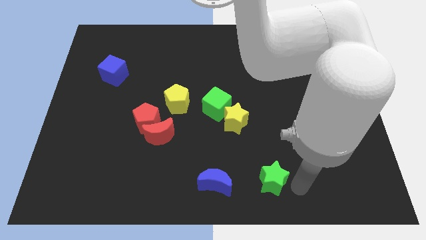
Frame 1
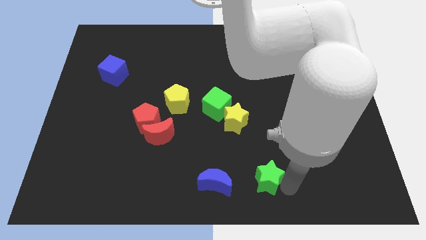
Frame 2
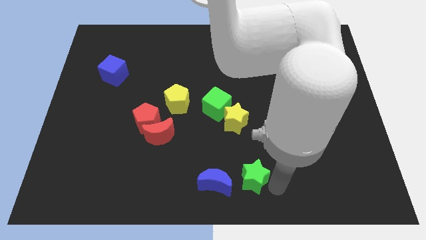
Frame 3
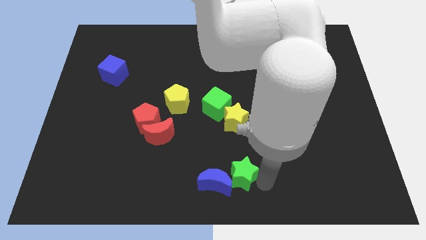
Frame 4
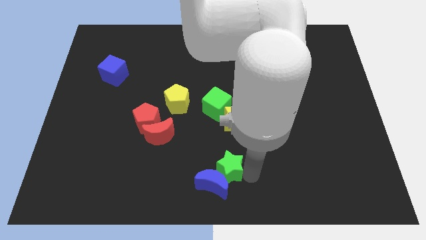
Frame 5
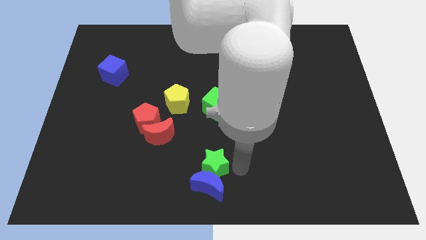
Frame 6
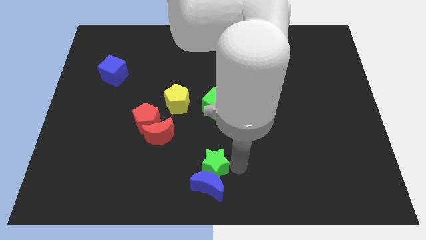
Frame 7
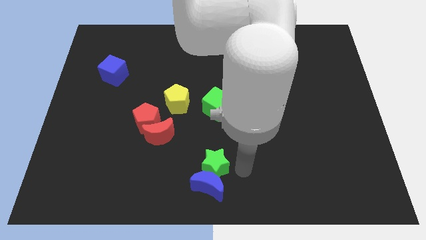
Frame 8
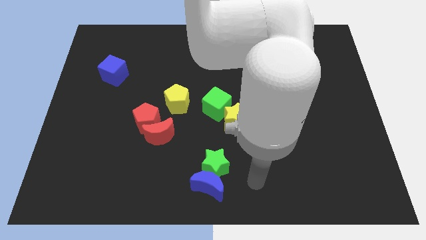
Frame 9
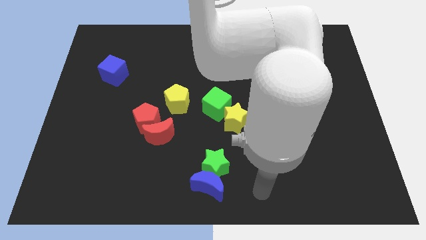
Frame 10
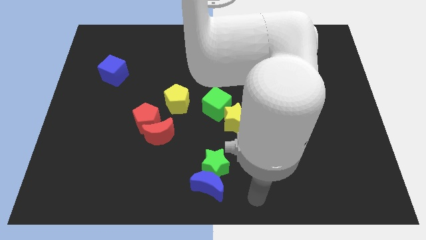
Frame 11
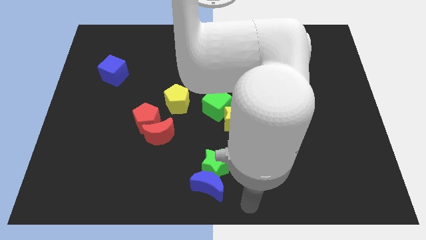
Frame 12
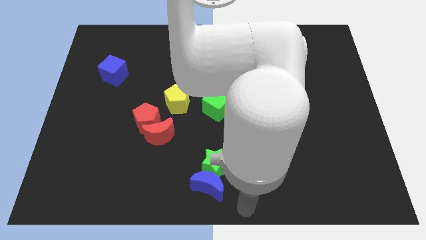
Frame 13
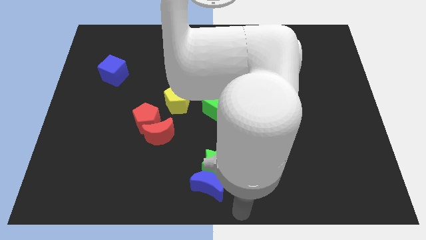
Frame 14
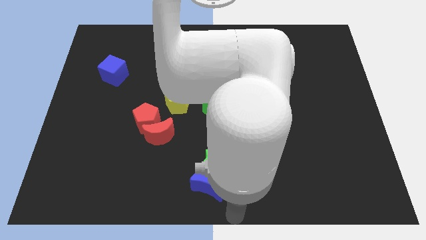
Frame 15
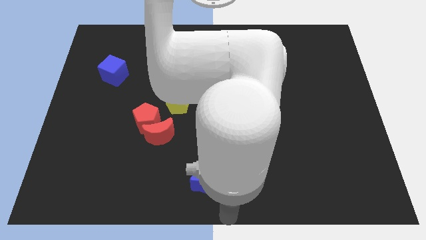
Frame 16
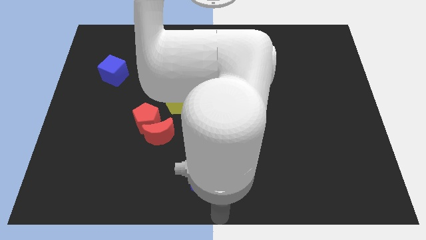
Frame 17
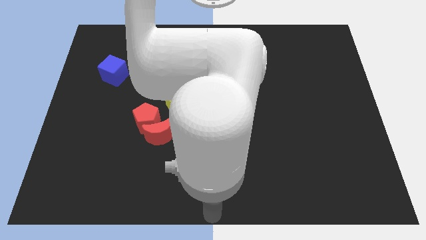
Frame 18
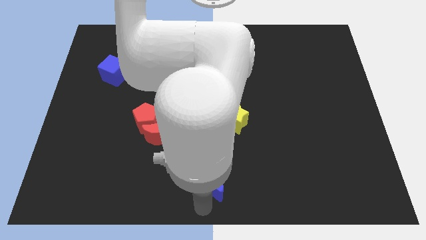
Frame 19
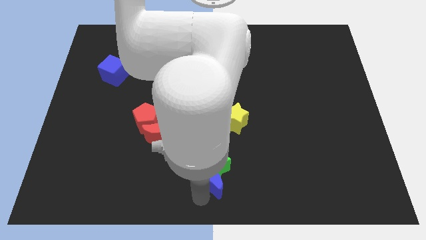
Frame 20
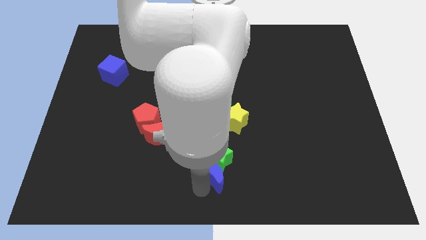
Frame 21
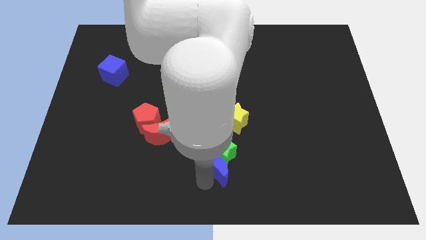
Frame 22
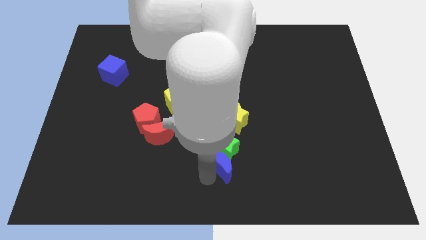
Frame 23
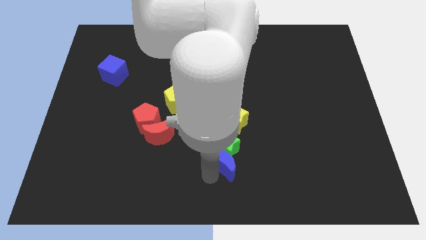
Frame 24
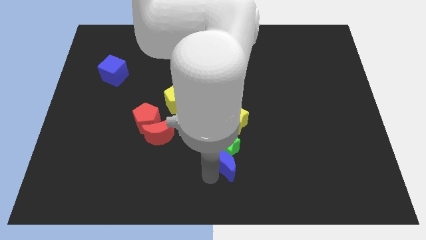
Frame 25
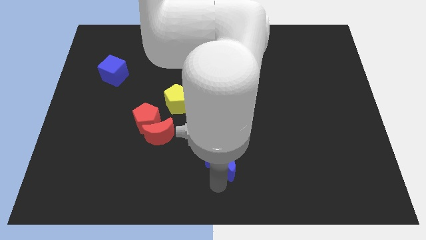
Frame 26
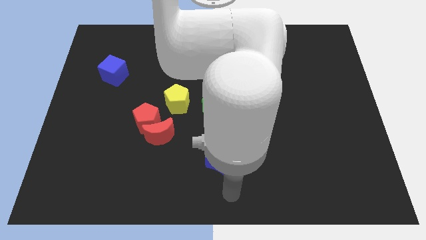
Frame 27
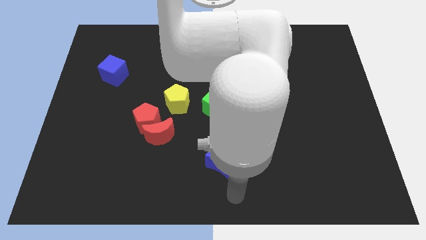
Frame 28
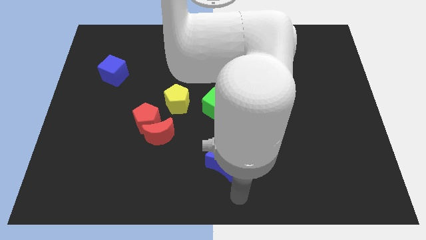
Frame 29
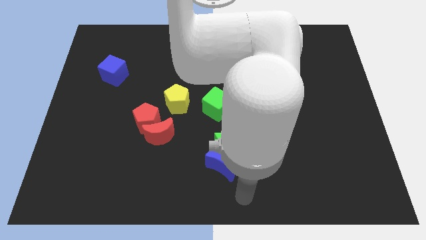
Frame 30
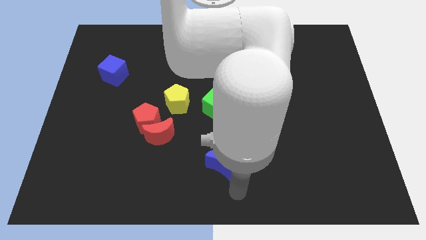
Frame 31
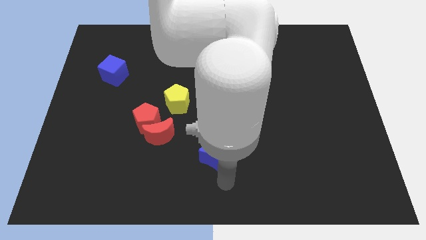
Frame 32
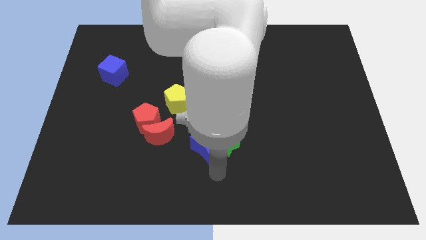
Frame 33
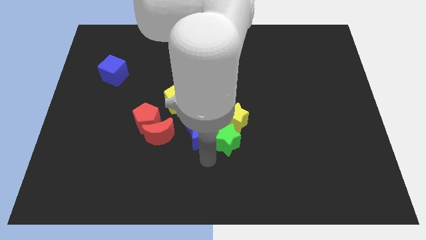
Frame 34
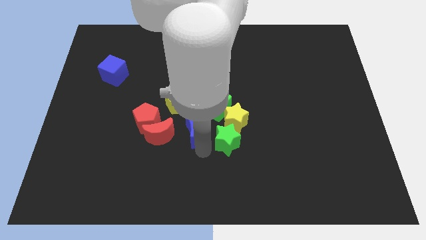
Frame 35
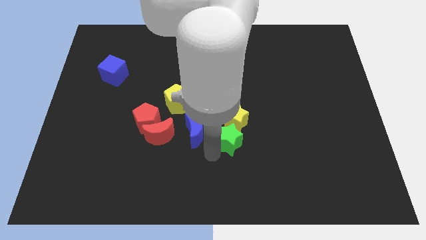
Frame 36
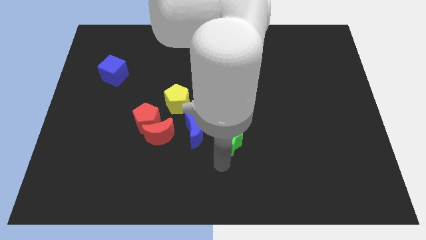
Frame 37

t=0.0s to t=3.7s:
drag the green star and blue moon towards the center of the board

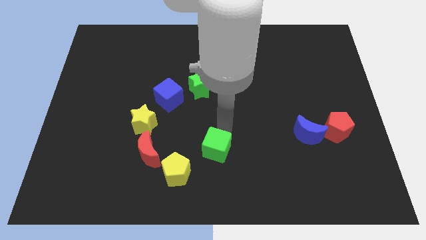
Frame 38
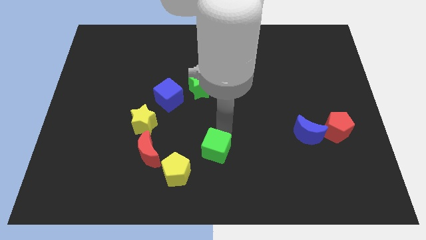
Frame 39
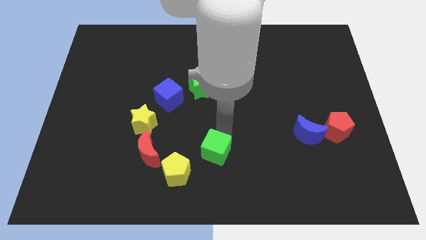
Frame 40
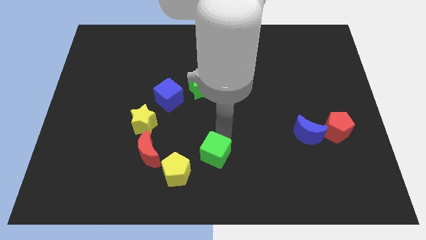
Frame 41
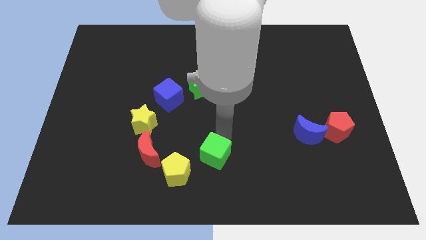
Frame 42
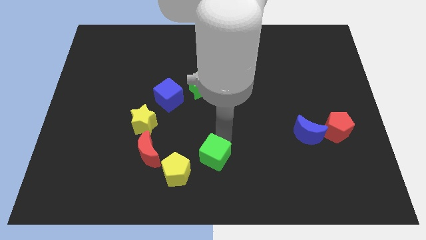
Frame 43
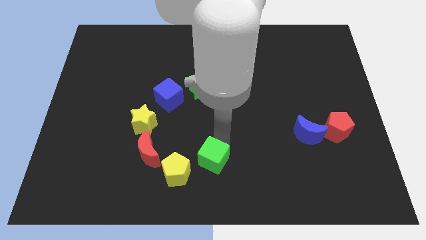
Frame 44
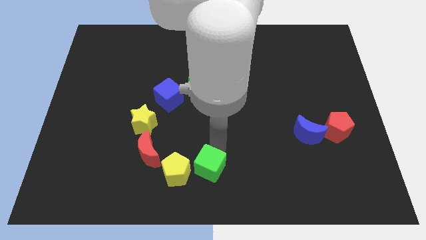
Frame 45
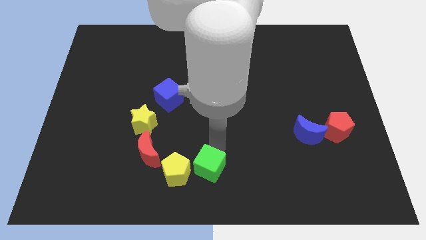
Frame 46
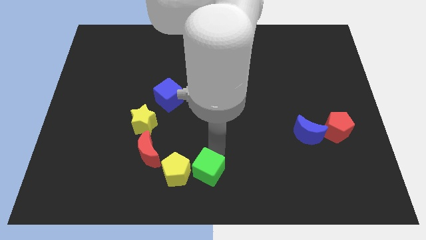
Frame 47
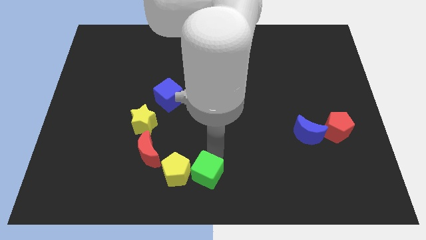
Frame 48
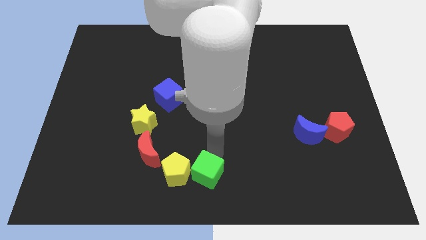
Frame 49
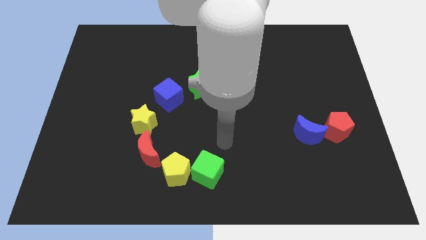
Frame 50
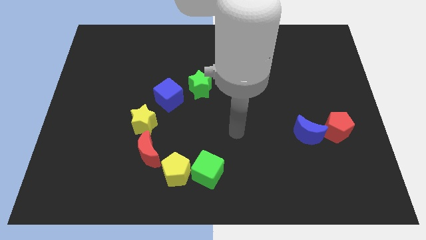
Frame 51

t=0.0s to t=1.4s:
move the green cube towards the yellow pentagon

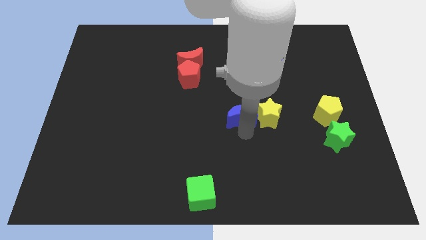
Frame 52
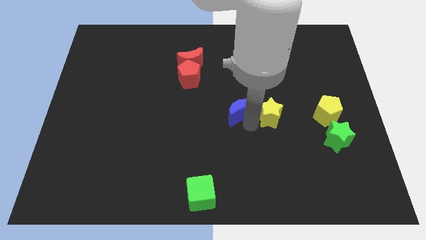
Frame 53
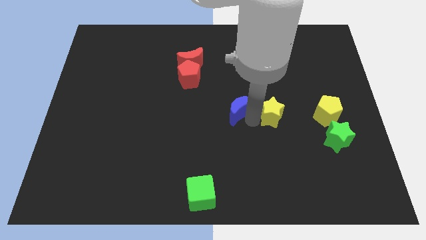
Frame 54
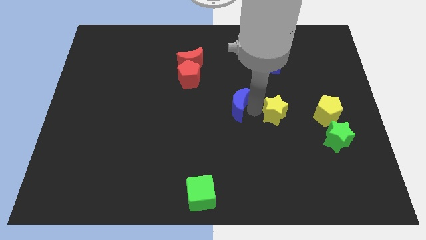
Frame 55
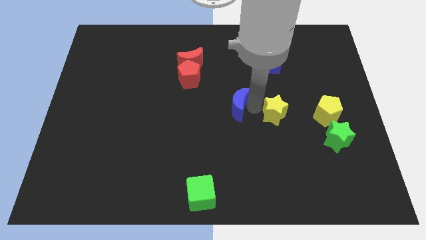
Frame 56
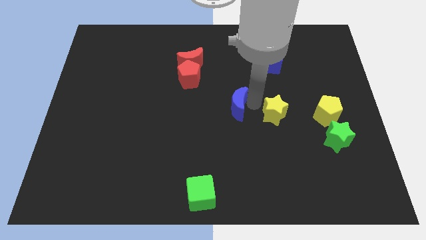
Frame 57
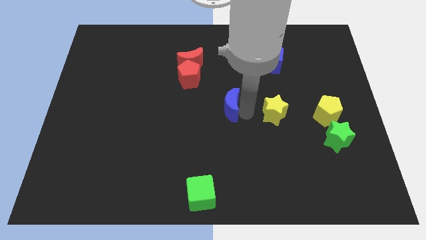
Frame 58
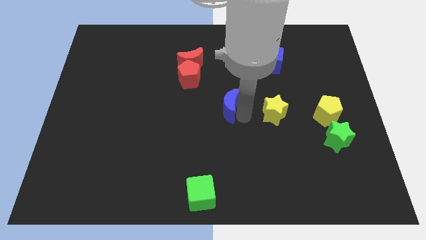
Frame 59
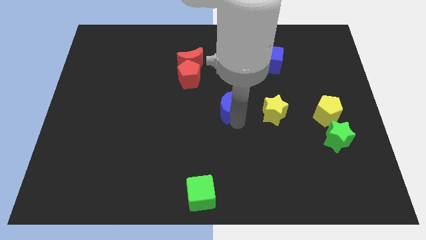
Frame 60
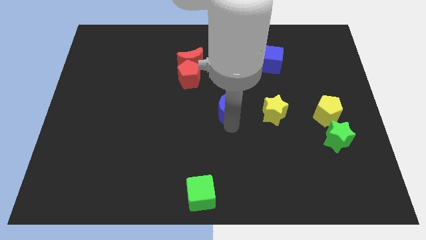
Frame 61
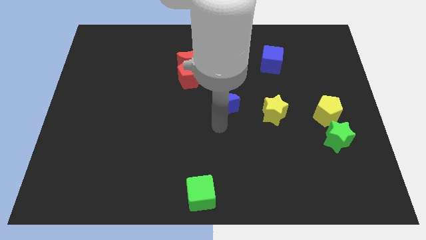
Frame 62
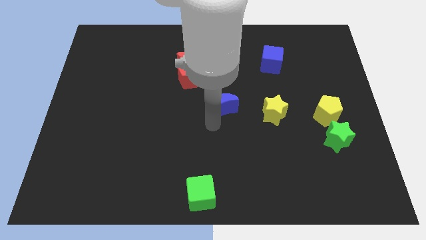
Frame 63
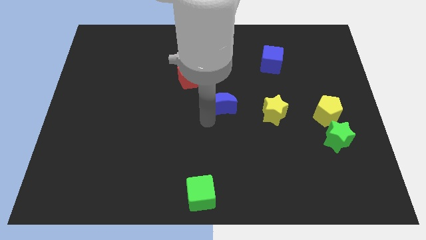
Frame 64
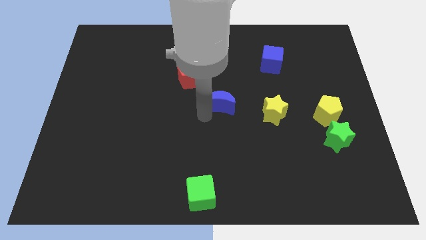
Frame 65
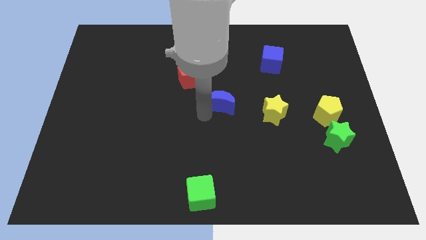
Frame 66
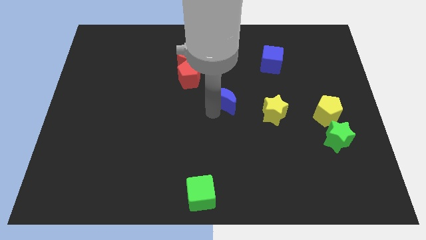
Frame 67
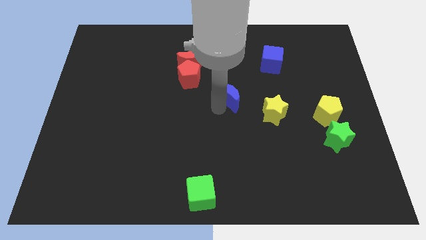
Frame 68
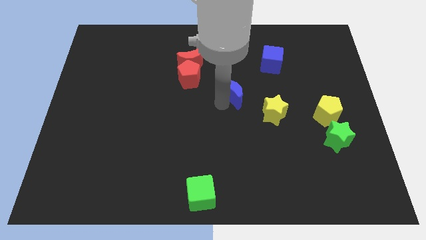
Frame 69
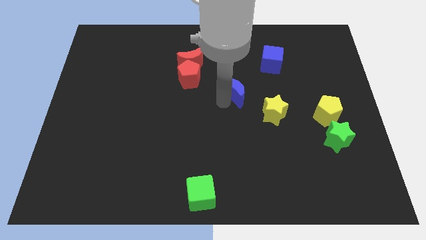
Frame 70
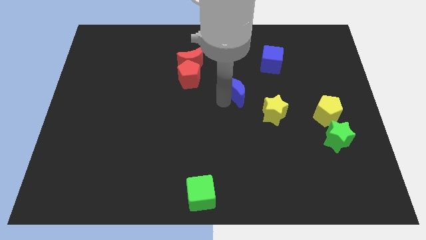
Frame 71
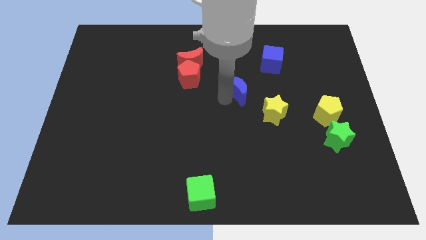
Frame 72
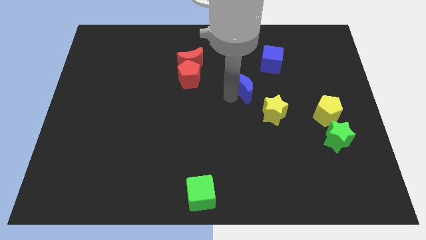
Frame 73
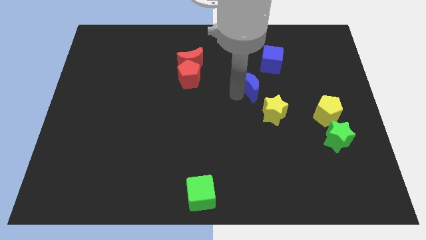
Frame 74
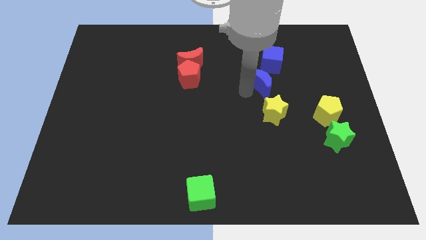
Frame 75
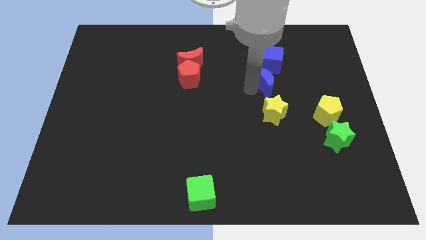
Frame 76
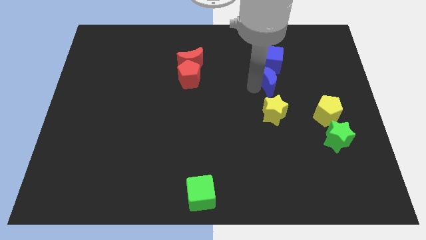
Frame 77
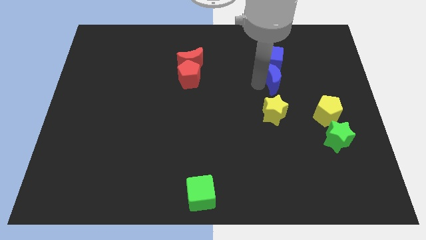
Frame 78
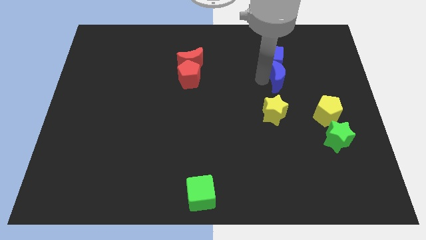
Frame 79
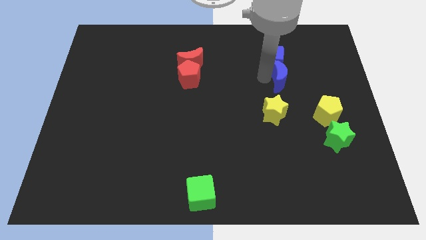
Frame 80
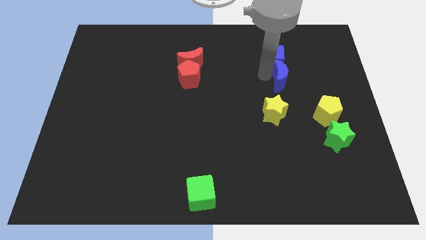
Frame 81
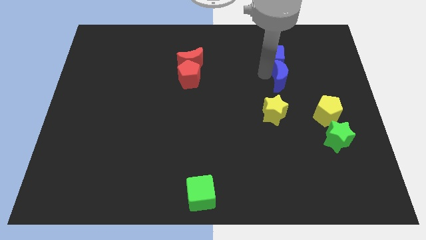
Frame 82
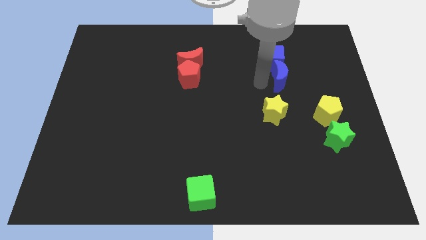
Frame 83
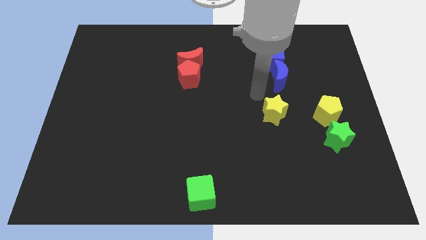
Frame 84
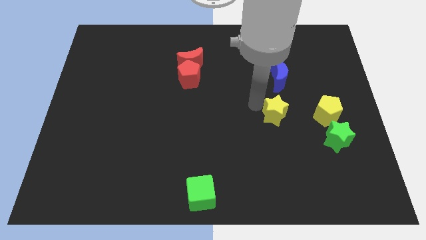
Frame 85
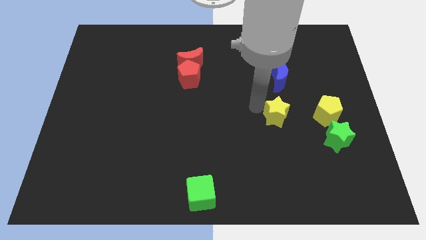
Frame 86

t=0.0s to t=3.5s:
push the blue moon into the blue cube

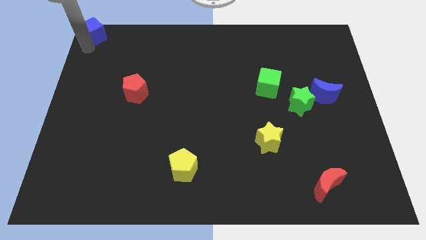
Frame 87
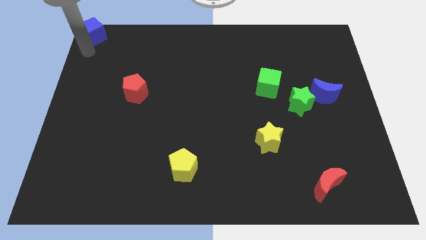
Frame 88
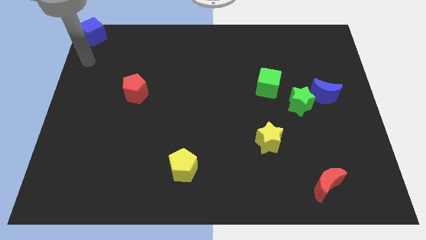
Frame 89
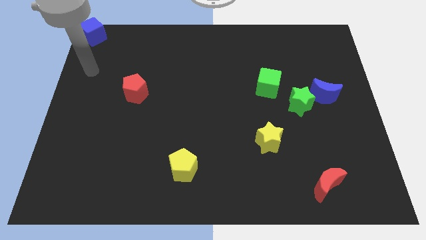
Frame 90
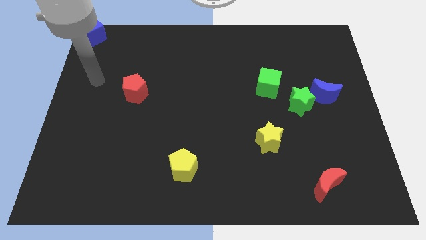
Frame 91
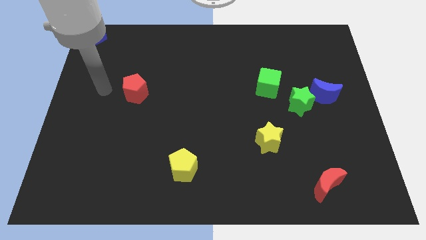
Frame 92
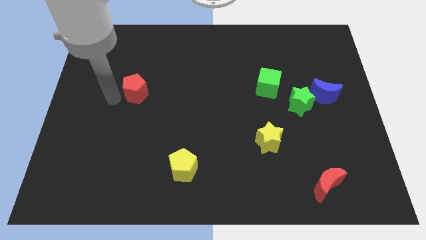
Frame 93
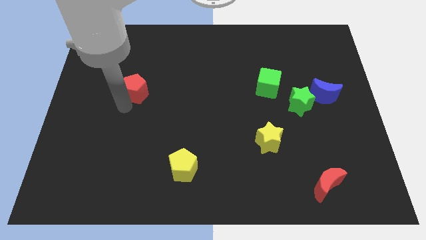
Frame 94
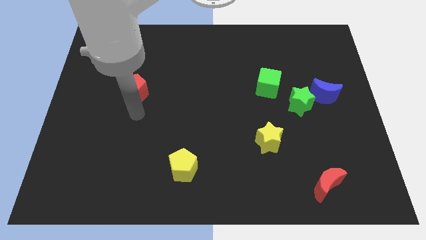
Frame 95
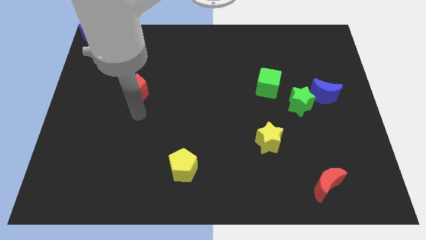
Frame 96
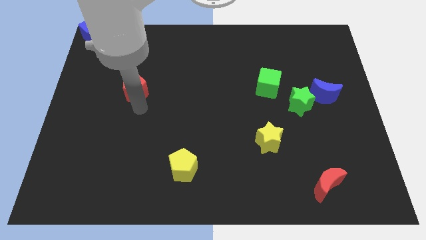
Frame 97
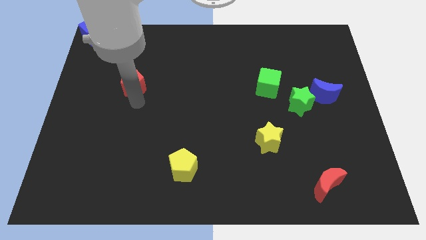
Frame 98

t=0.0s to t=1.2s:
place your arm to the bottom side of the red pentagon
